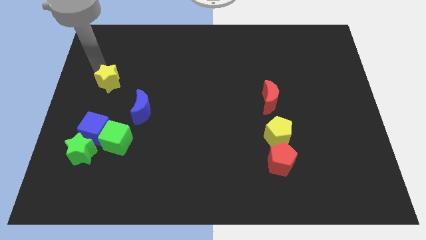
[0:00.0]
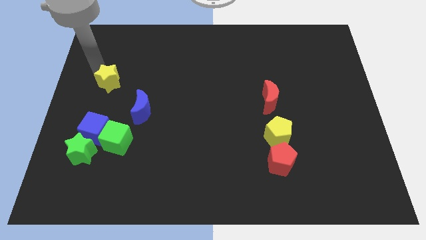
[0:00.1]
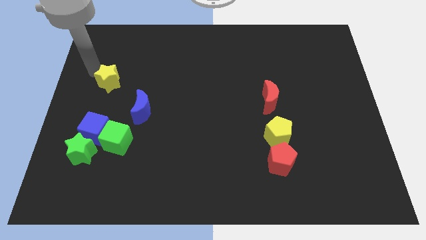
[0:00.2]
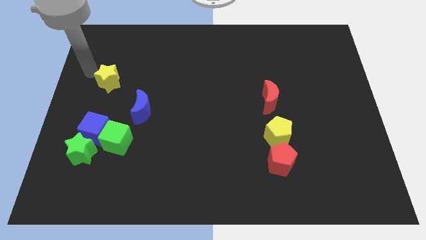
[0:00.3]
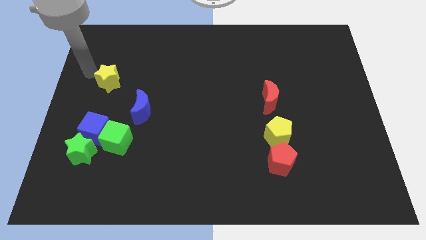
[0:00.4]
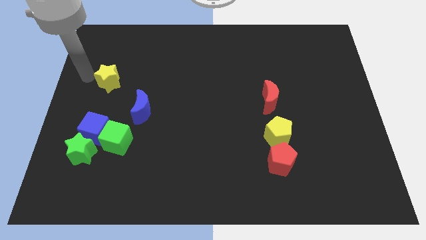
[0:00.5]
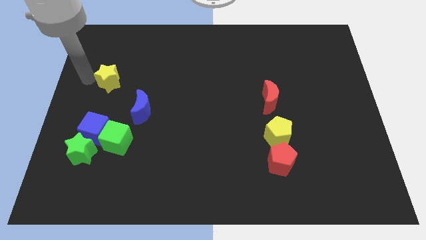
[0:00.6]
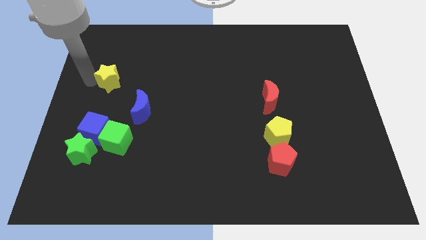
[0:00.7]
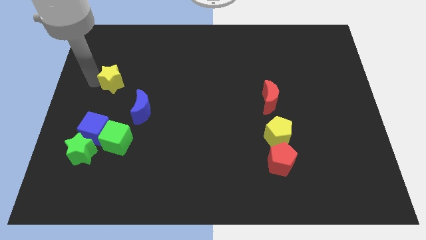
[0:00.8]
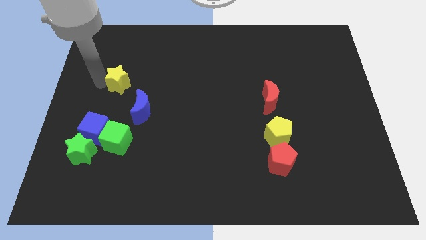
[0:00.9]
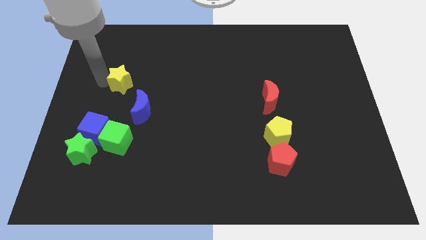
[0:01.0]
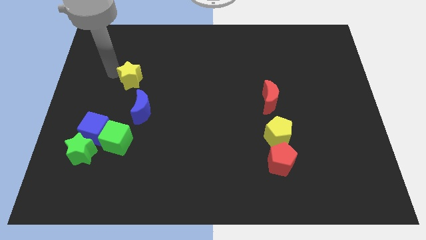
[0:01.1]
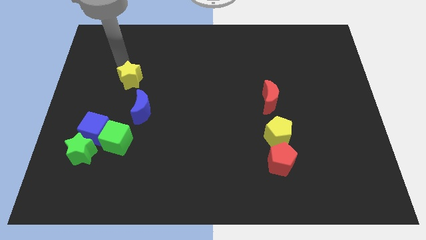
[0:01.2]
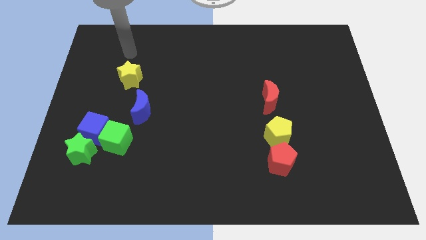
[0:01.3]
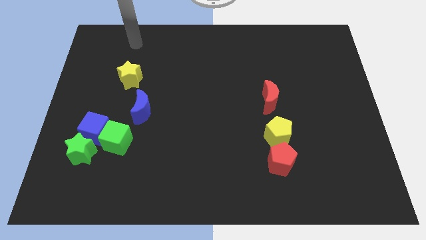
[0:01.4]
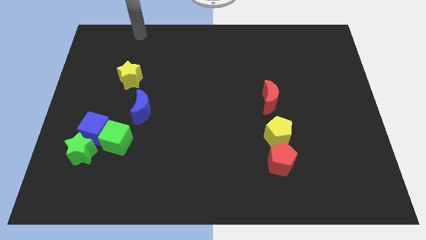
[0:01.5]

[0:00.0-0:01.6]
move the yellow star to the left top side of the blue crescent

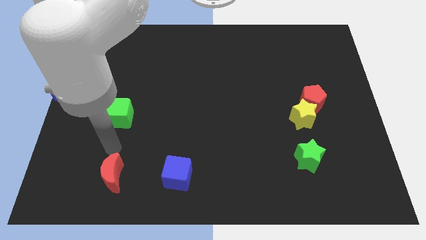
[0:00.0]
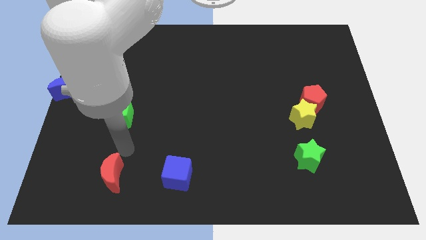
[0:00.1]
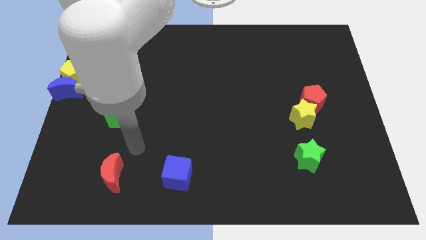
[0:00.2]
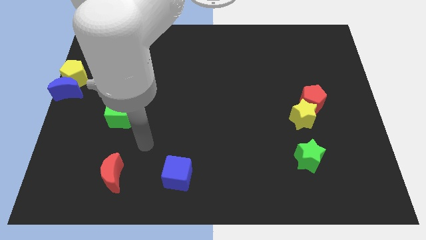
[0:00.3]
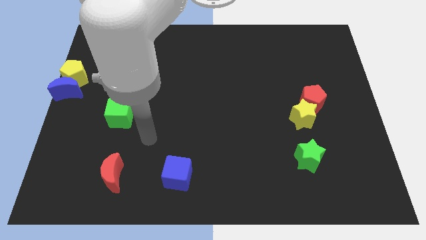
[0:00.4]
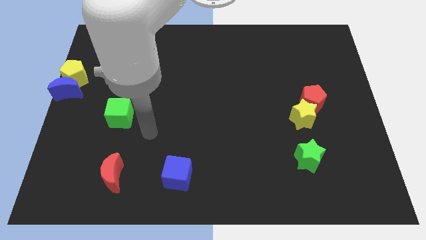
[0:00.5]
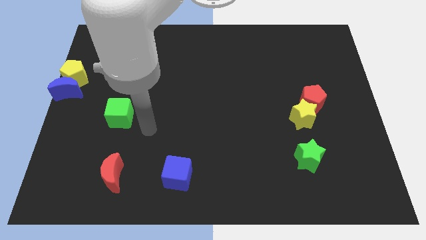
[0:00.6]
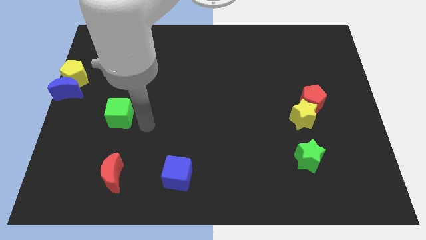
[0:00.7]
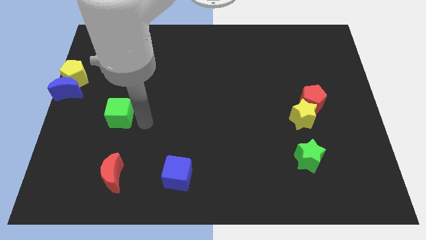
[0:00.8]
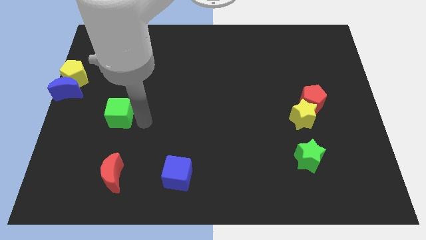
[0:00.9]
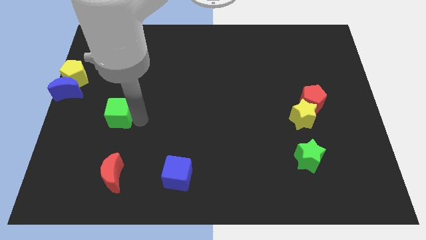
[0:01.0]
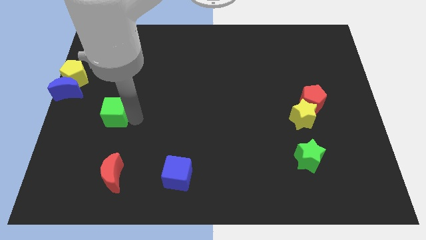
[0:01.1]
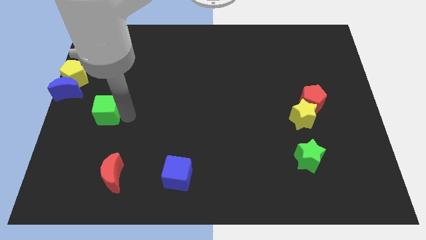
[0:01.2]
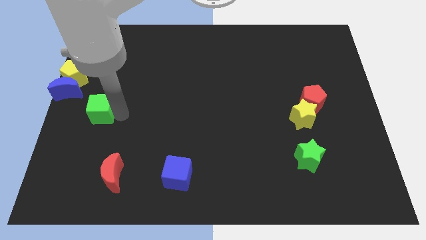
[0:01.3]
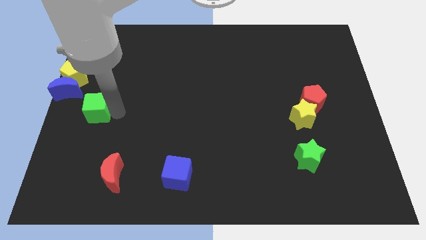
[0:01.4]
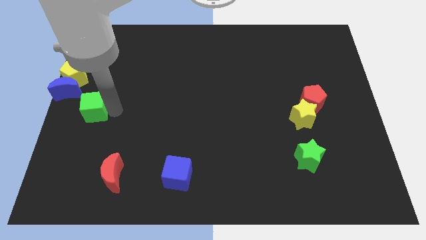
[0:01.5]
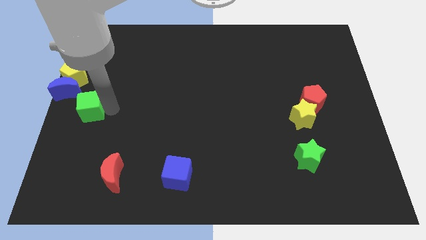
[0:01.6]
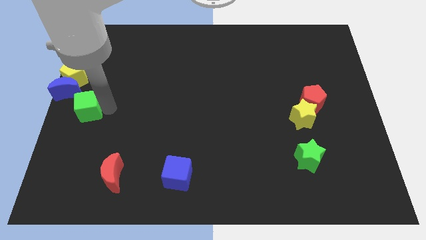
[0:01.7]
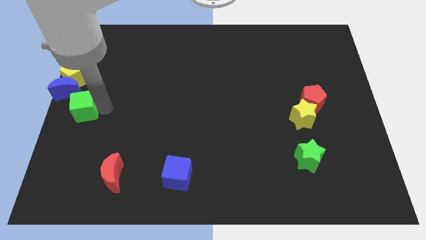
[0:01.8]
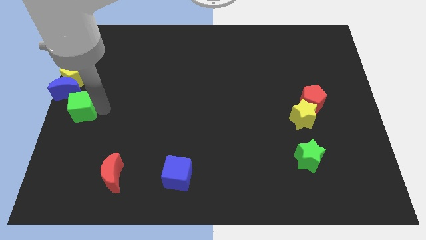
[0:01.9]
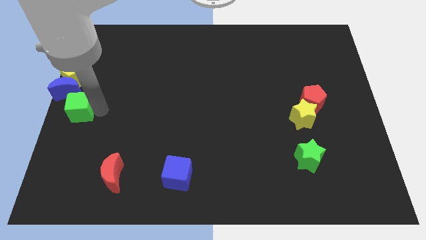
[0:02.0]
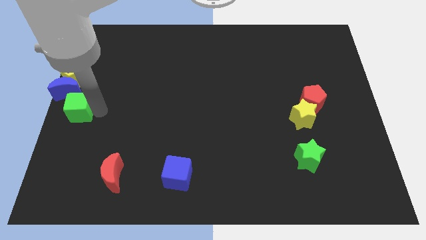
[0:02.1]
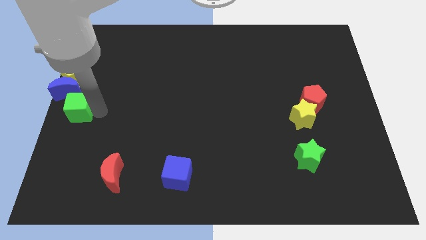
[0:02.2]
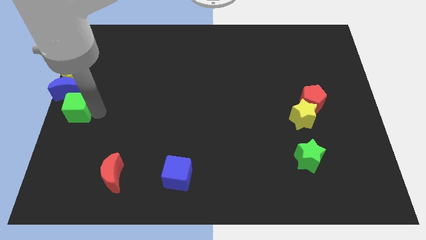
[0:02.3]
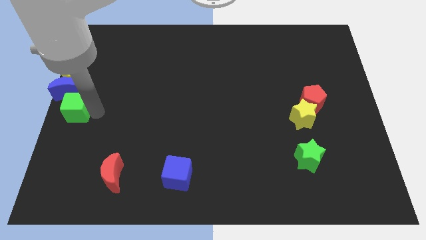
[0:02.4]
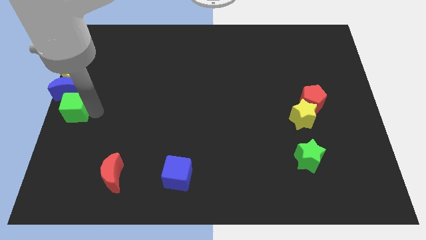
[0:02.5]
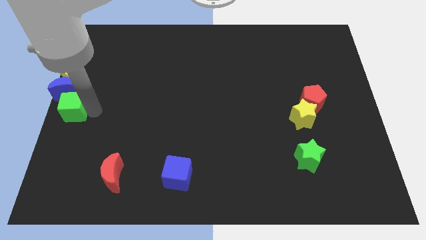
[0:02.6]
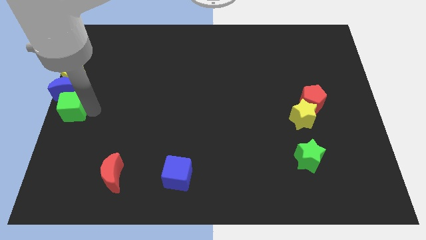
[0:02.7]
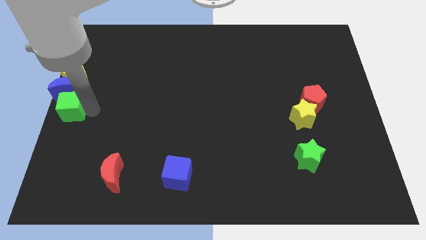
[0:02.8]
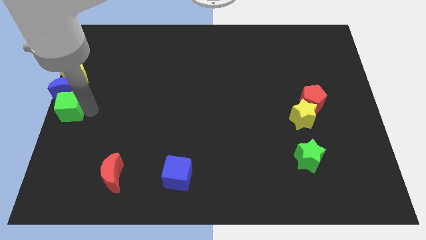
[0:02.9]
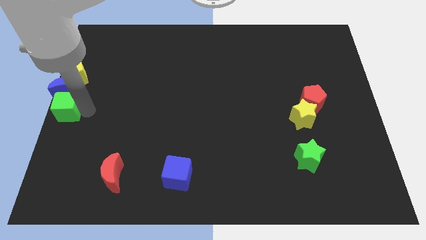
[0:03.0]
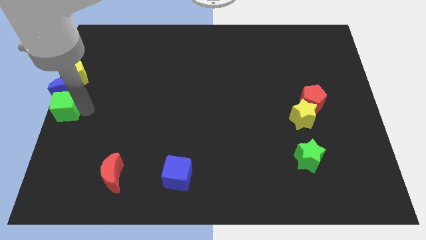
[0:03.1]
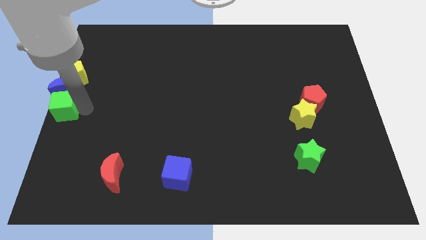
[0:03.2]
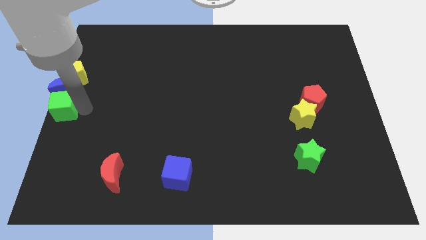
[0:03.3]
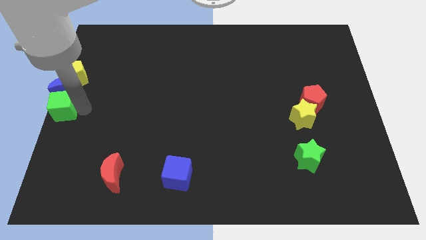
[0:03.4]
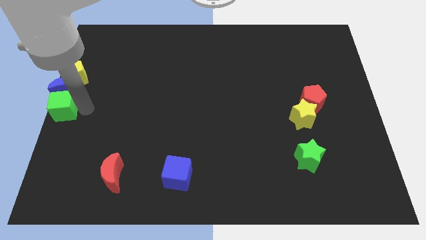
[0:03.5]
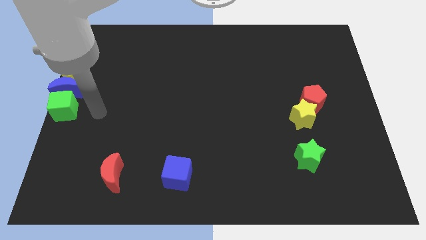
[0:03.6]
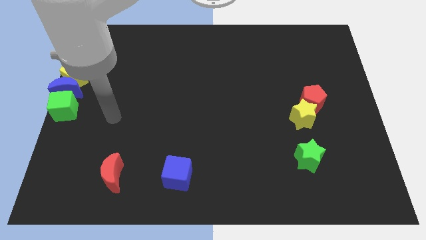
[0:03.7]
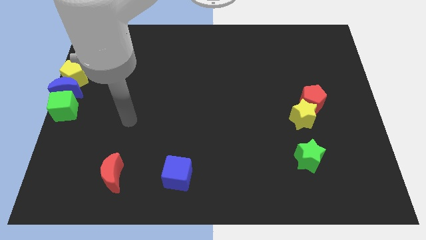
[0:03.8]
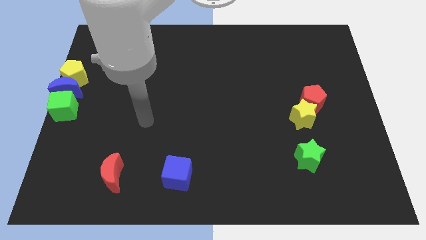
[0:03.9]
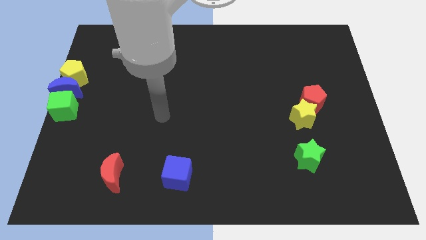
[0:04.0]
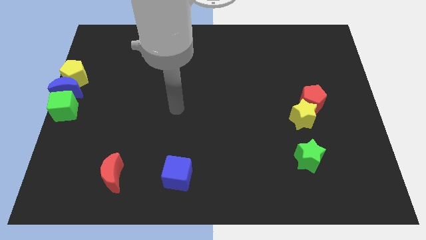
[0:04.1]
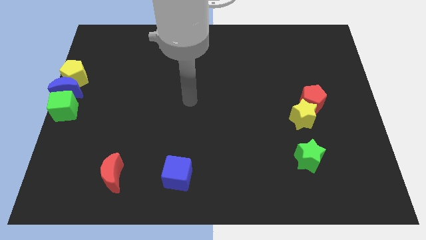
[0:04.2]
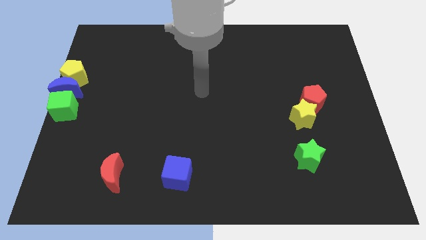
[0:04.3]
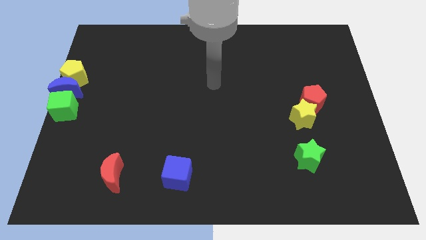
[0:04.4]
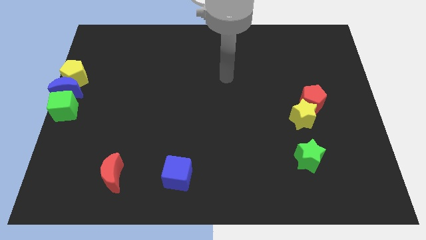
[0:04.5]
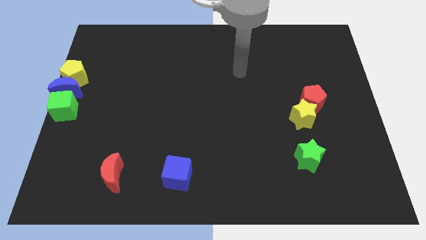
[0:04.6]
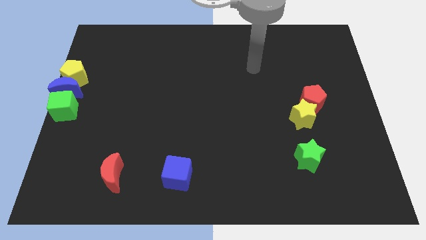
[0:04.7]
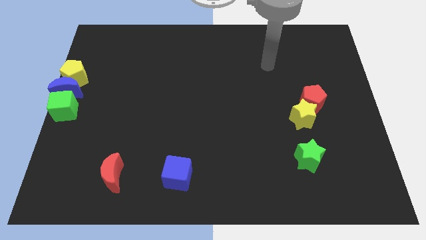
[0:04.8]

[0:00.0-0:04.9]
place the green cube under the blue moon

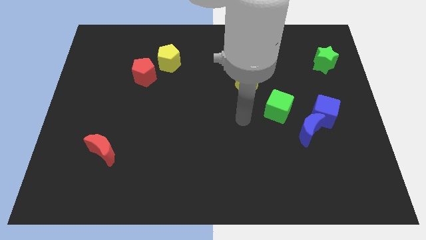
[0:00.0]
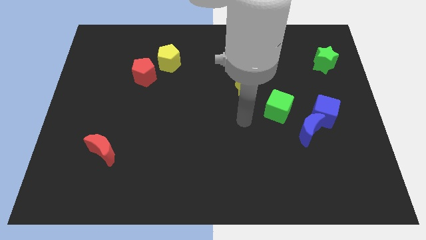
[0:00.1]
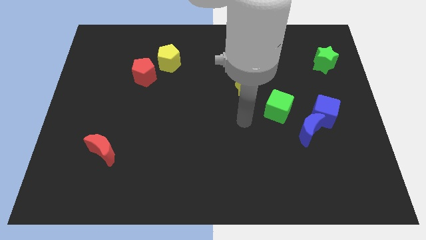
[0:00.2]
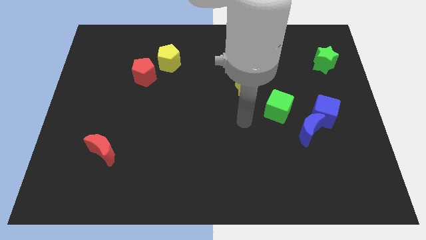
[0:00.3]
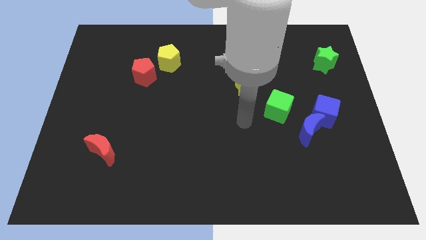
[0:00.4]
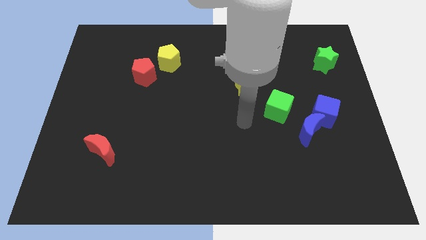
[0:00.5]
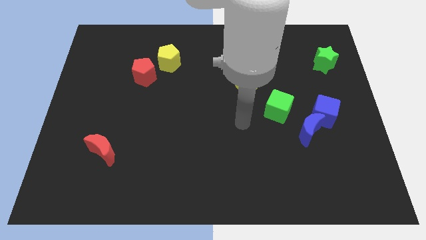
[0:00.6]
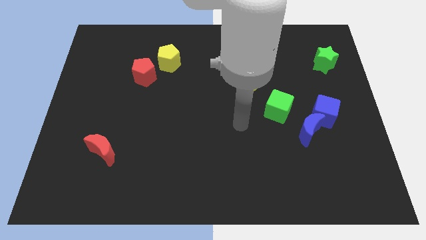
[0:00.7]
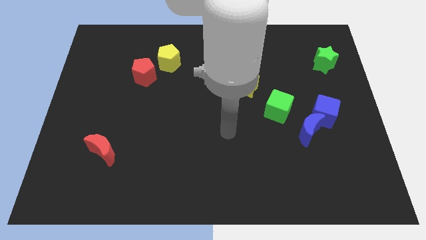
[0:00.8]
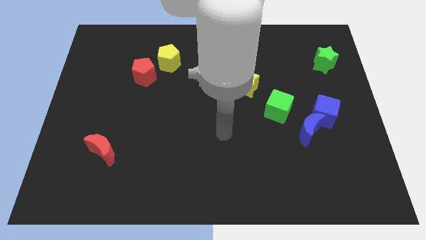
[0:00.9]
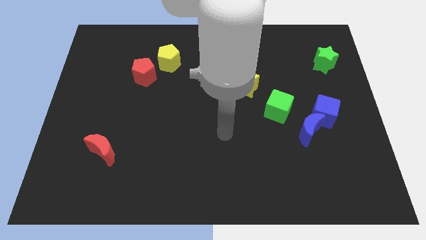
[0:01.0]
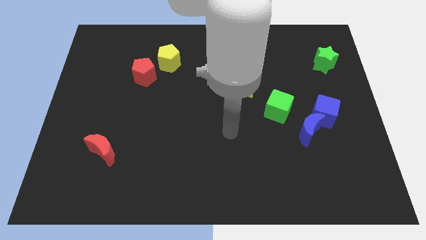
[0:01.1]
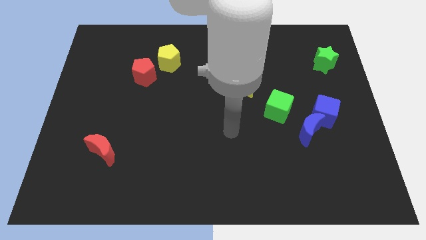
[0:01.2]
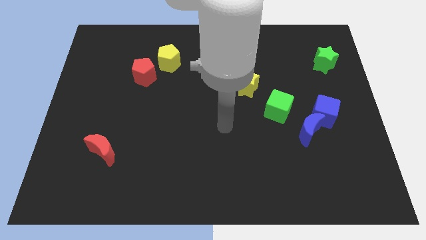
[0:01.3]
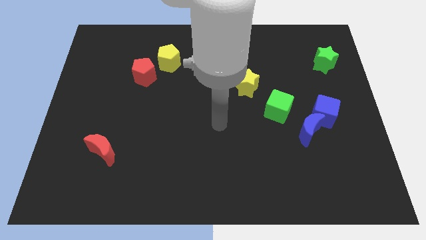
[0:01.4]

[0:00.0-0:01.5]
move your arm to center

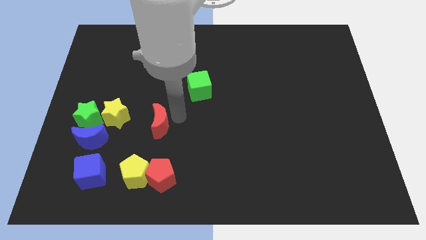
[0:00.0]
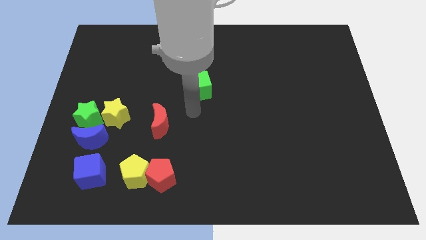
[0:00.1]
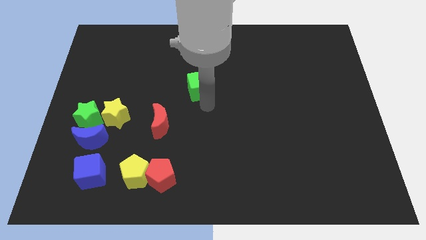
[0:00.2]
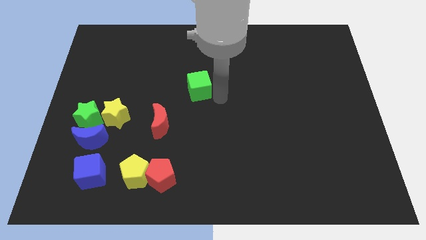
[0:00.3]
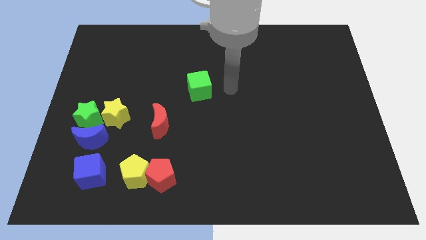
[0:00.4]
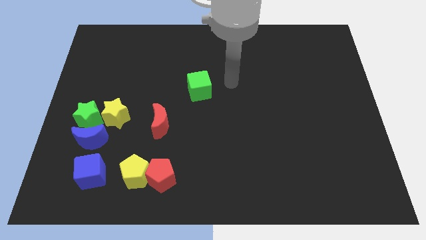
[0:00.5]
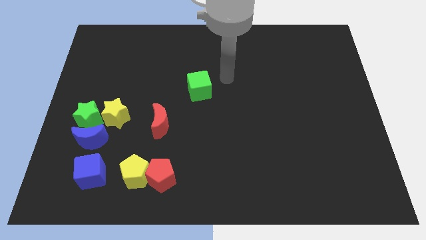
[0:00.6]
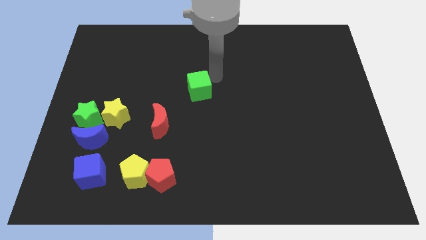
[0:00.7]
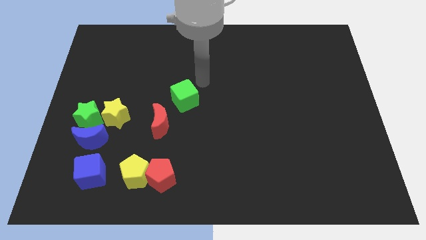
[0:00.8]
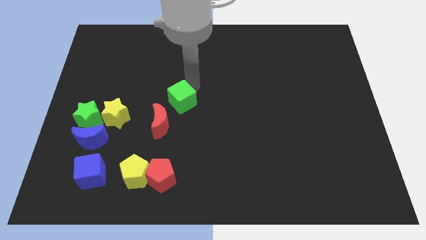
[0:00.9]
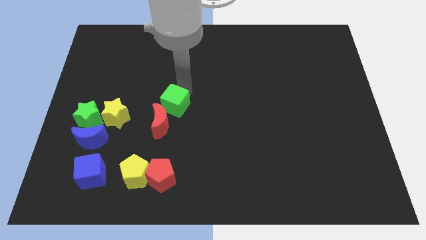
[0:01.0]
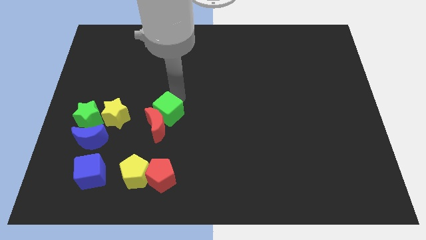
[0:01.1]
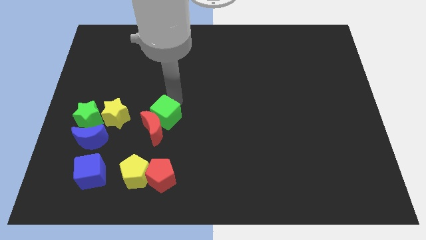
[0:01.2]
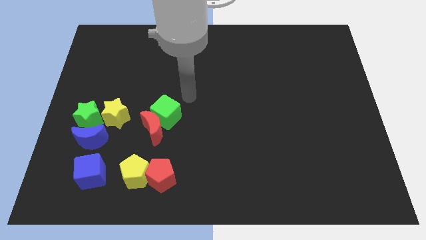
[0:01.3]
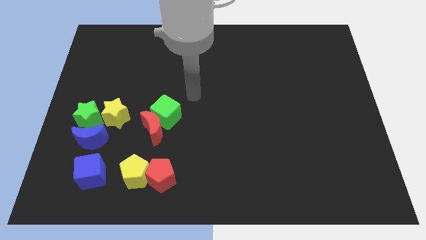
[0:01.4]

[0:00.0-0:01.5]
push the green cube into the red moon
